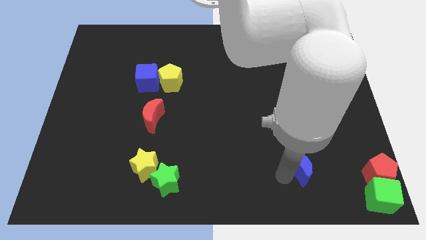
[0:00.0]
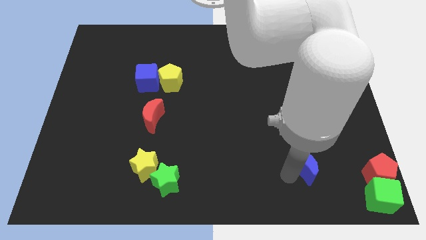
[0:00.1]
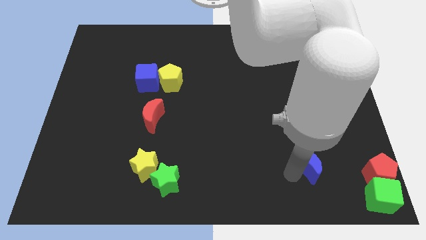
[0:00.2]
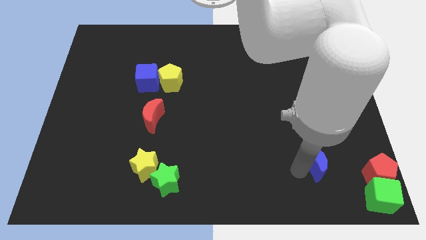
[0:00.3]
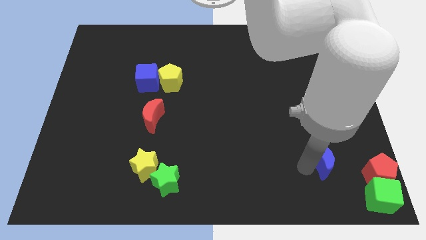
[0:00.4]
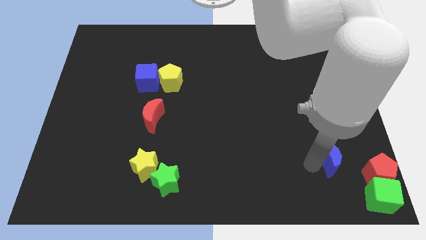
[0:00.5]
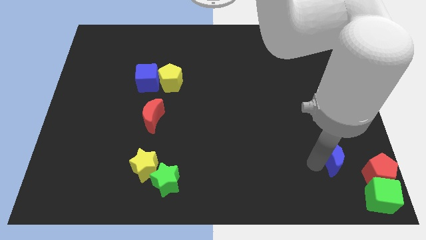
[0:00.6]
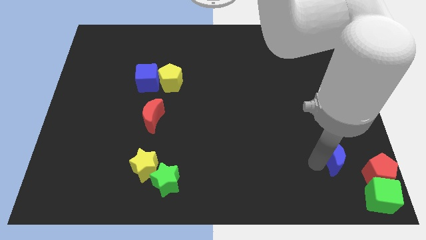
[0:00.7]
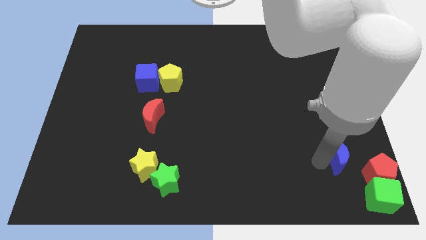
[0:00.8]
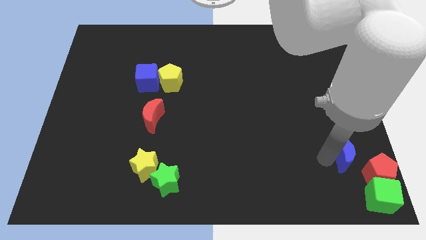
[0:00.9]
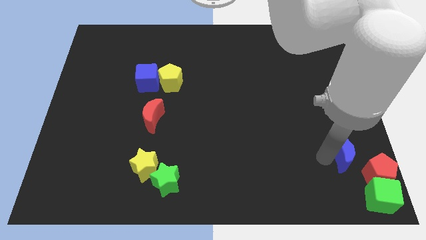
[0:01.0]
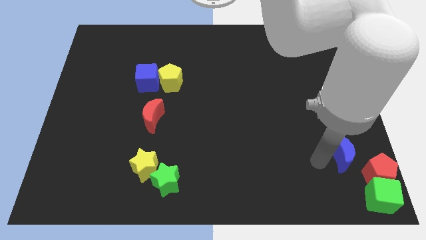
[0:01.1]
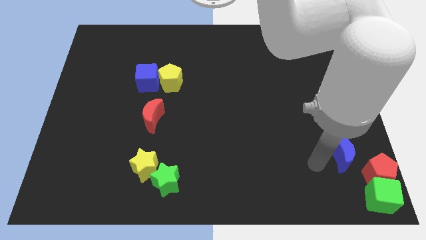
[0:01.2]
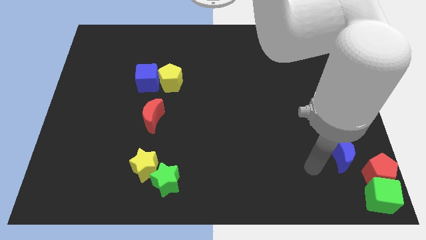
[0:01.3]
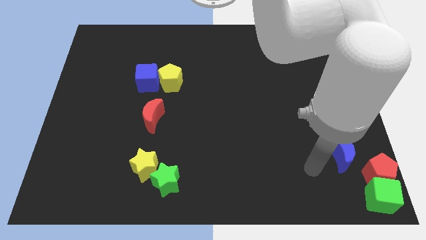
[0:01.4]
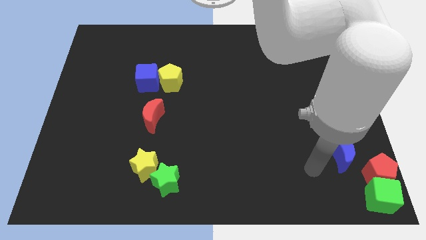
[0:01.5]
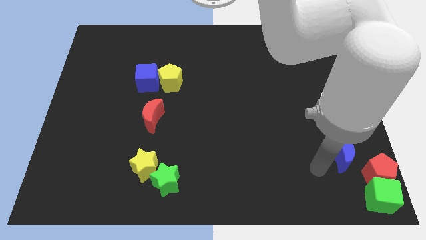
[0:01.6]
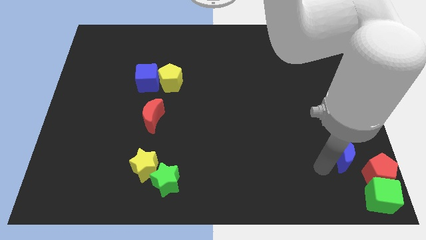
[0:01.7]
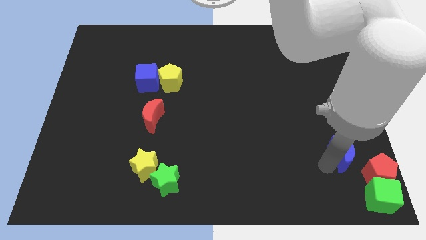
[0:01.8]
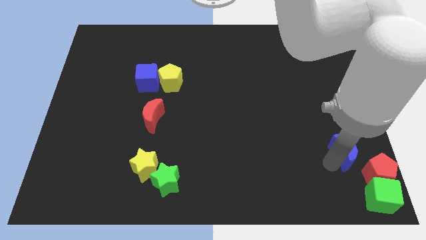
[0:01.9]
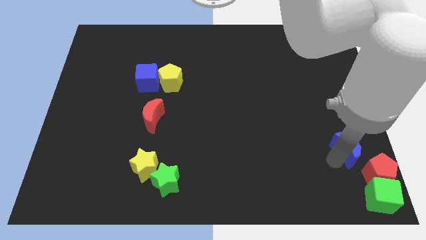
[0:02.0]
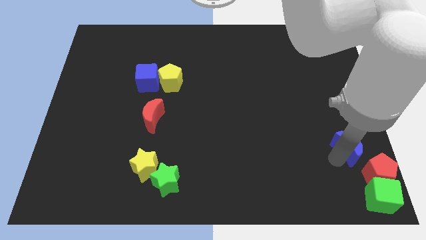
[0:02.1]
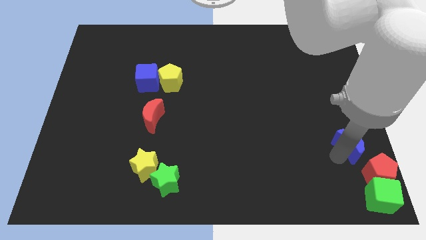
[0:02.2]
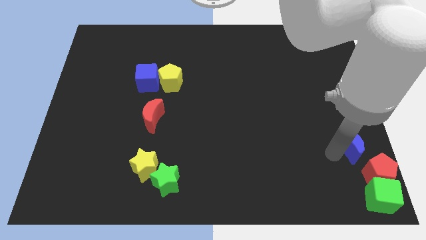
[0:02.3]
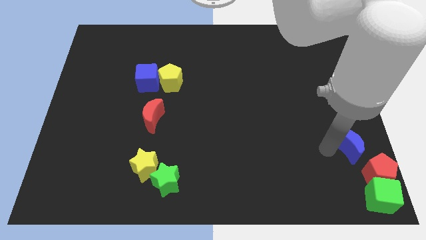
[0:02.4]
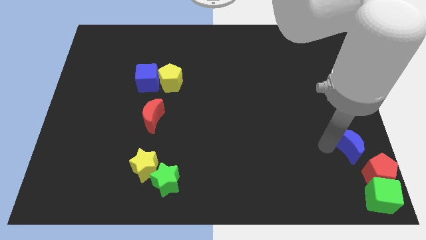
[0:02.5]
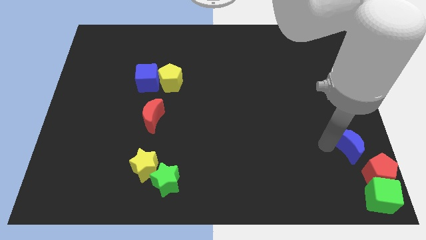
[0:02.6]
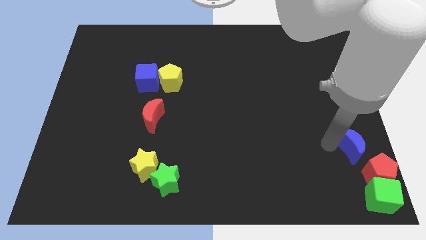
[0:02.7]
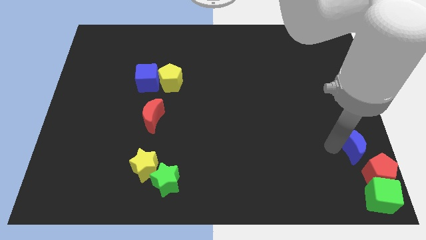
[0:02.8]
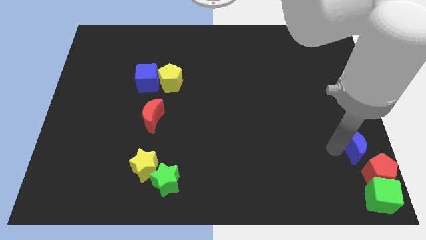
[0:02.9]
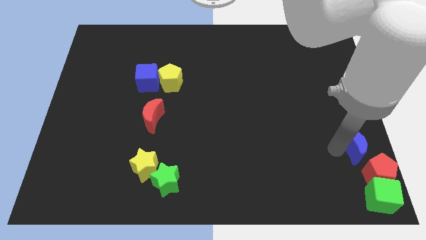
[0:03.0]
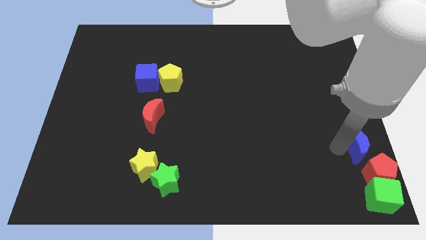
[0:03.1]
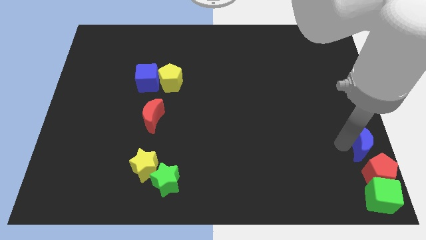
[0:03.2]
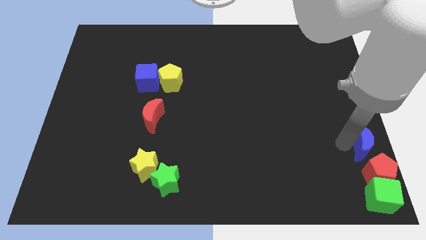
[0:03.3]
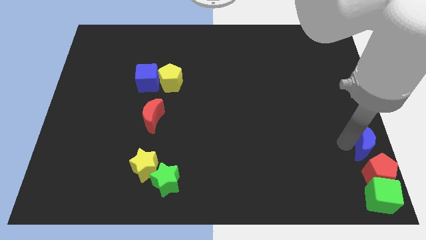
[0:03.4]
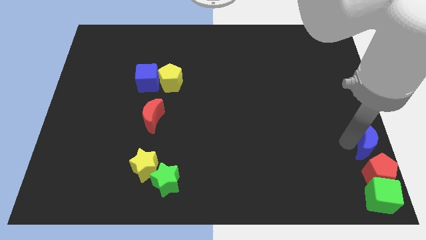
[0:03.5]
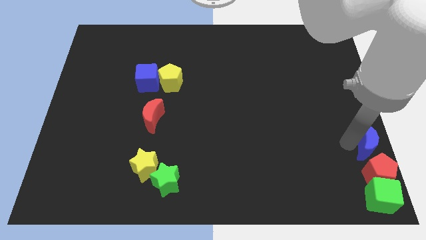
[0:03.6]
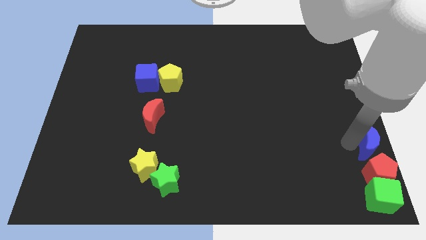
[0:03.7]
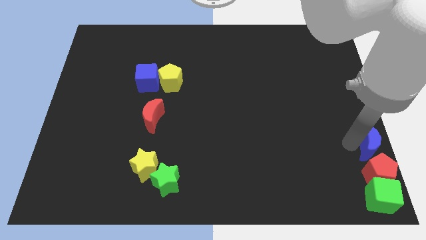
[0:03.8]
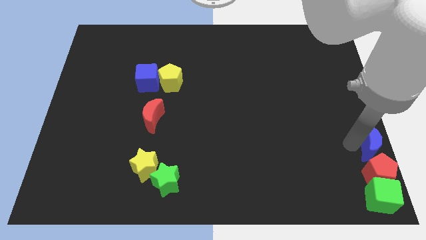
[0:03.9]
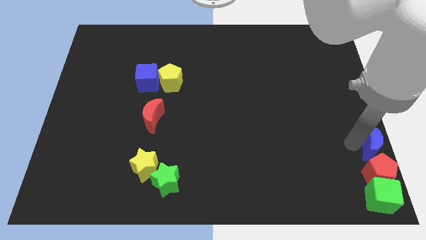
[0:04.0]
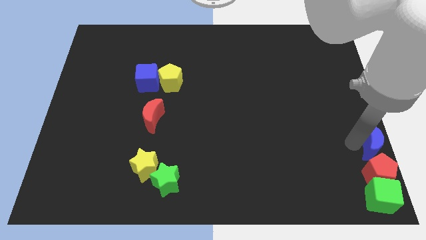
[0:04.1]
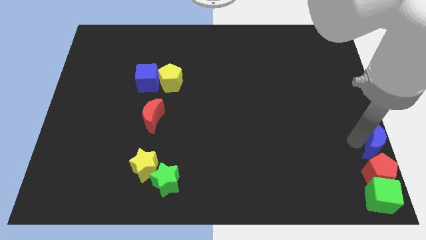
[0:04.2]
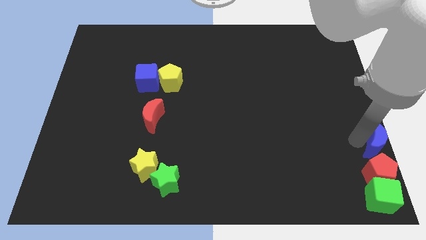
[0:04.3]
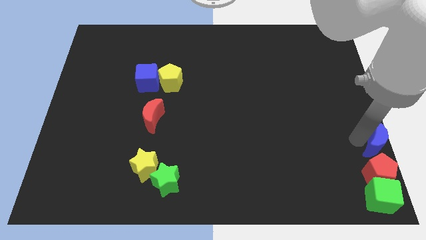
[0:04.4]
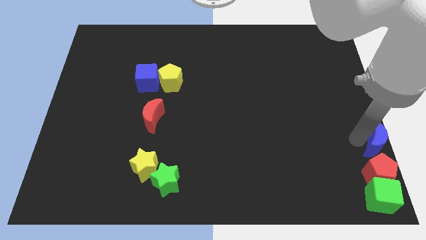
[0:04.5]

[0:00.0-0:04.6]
move blue crescent to the top of red pentagon

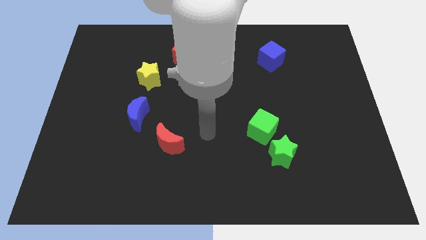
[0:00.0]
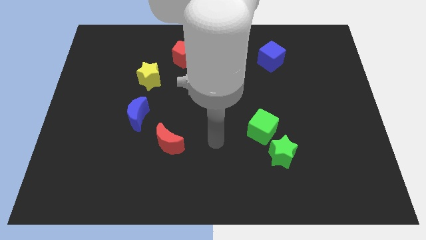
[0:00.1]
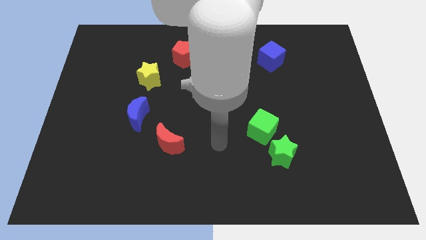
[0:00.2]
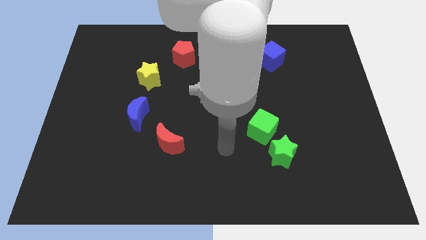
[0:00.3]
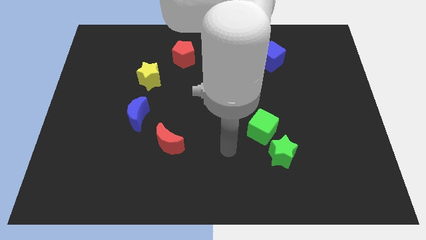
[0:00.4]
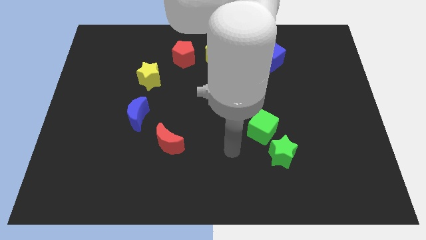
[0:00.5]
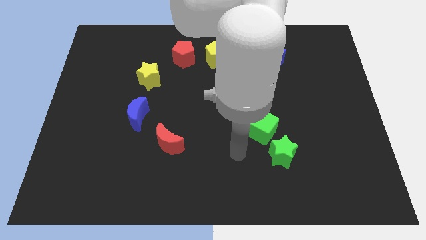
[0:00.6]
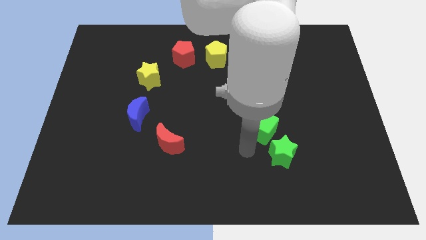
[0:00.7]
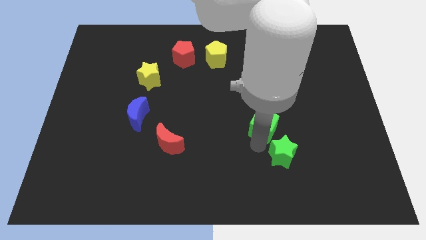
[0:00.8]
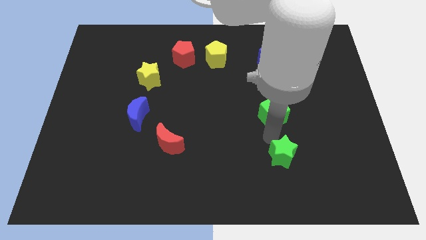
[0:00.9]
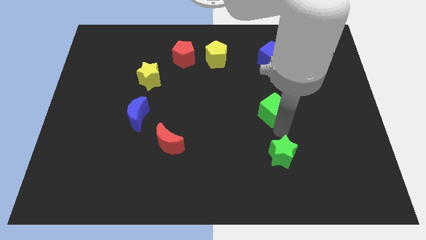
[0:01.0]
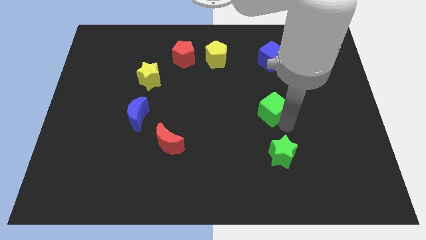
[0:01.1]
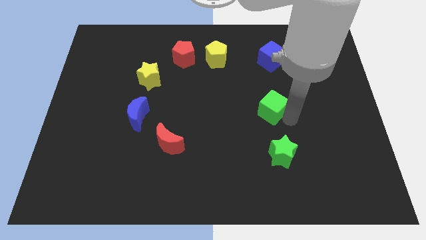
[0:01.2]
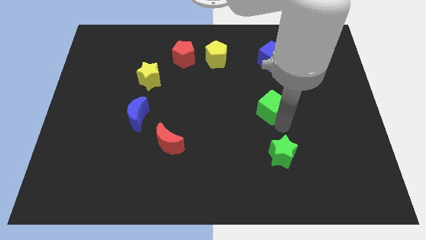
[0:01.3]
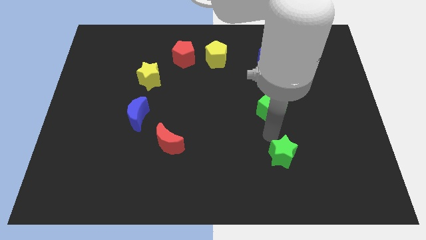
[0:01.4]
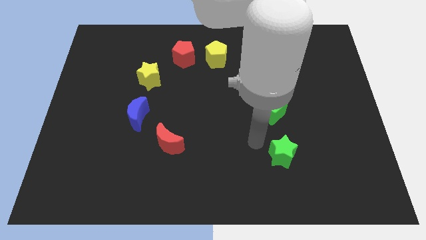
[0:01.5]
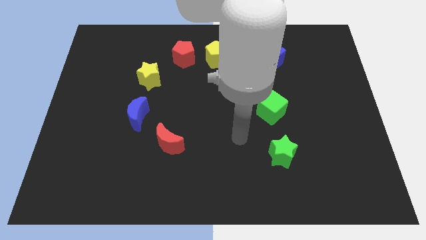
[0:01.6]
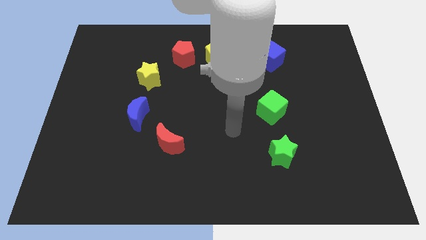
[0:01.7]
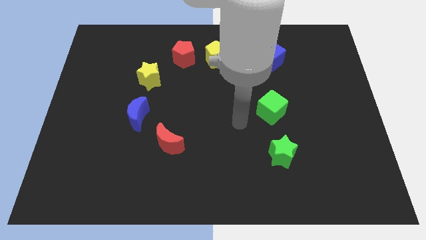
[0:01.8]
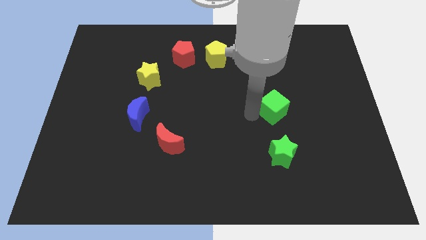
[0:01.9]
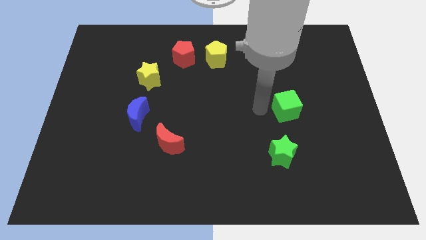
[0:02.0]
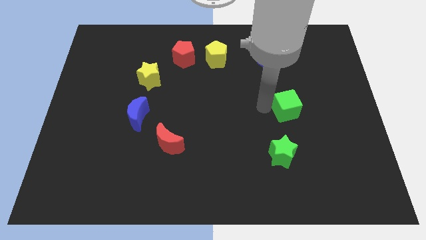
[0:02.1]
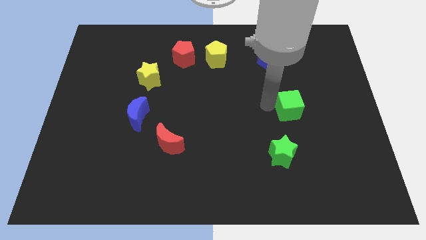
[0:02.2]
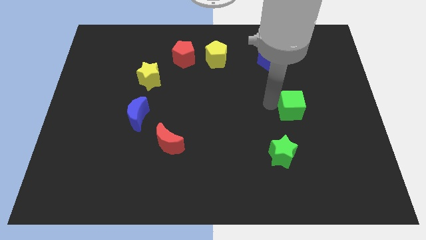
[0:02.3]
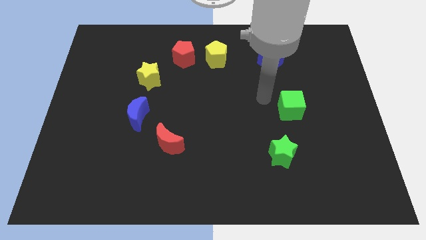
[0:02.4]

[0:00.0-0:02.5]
push the green cube slightly to the right

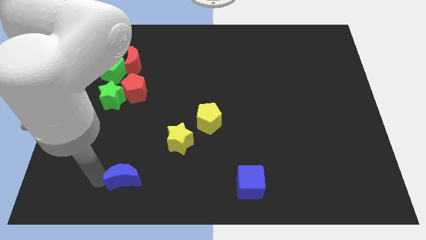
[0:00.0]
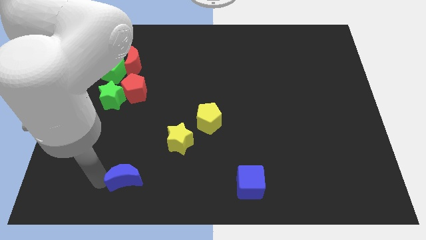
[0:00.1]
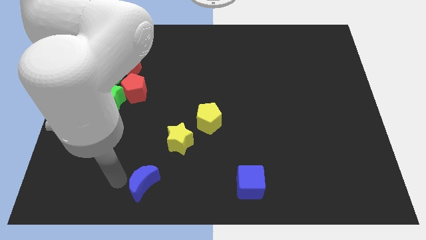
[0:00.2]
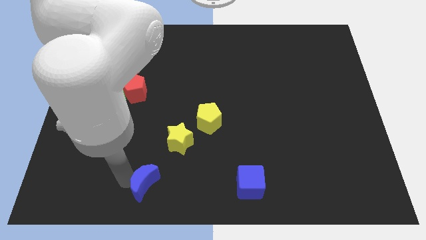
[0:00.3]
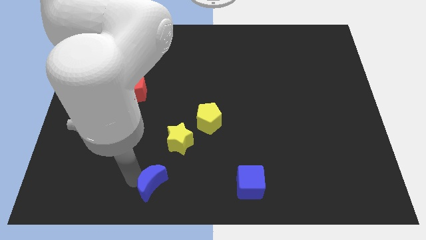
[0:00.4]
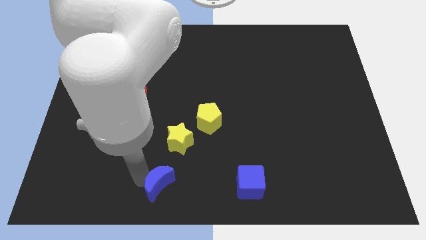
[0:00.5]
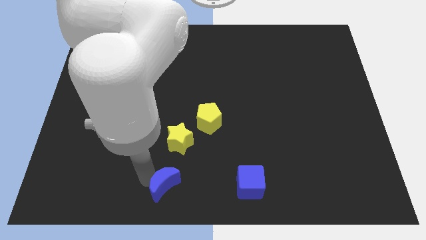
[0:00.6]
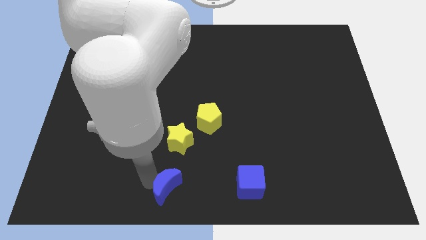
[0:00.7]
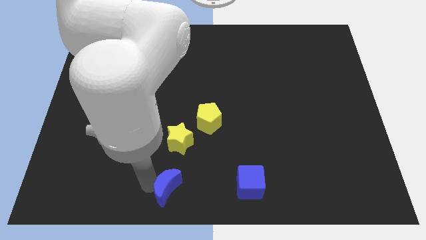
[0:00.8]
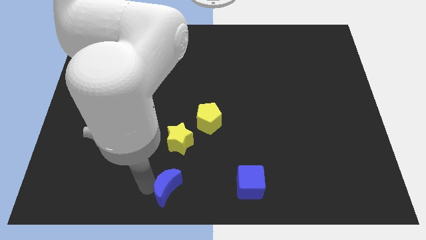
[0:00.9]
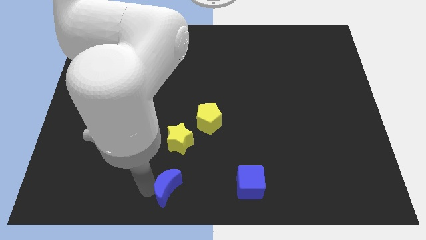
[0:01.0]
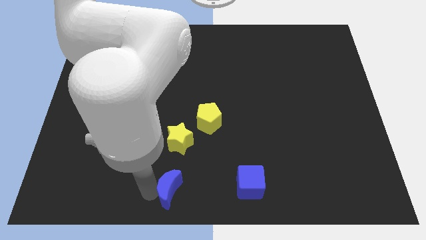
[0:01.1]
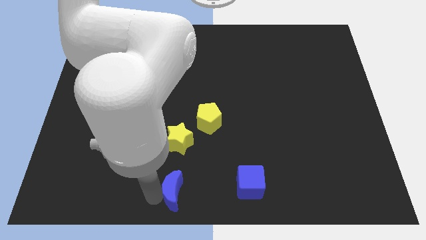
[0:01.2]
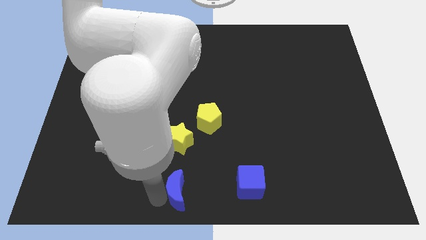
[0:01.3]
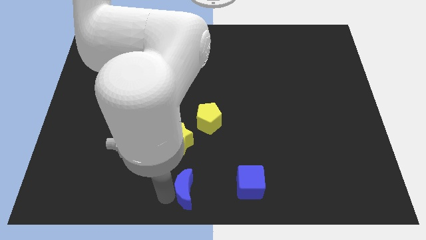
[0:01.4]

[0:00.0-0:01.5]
place blue moon to the bottom of yellow star

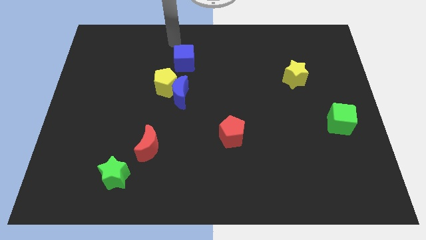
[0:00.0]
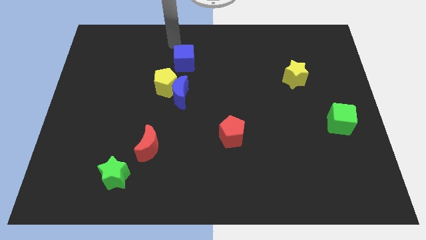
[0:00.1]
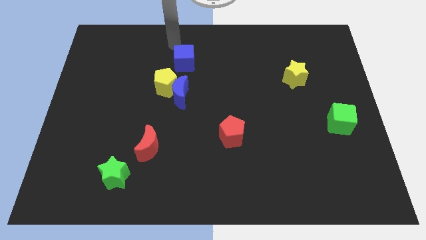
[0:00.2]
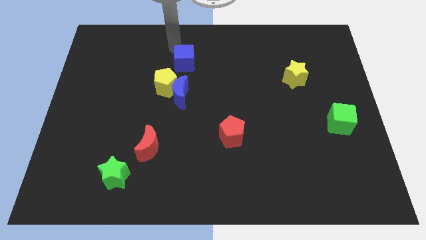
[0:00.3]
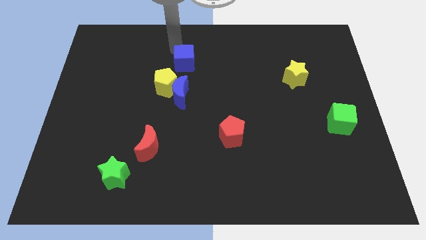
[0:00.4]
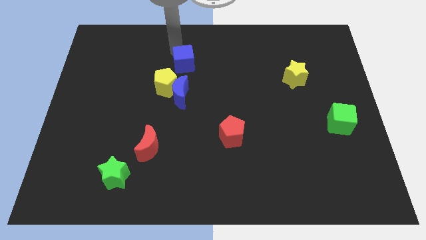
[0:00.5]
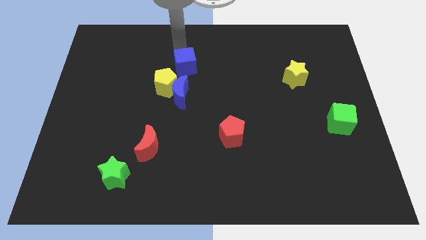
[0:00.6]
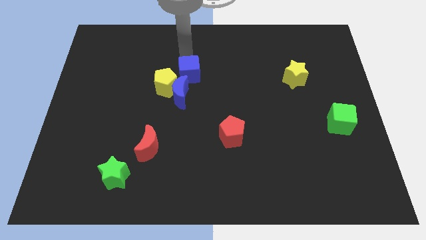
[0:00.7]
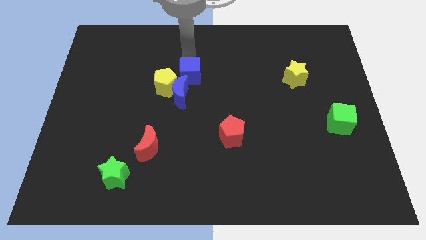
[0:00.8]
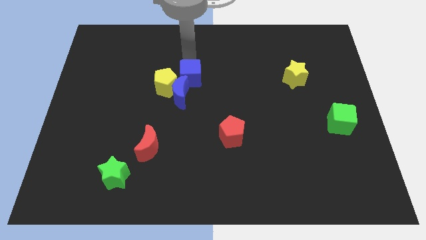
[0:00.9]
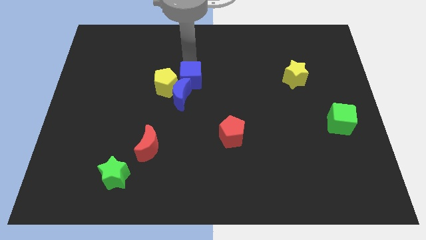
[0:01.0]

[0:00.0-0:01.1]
place blue cube to the top of blue crescent
